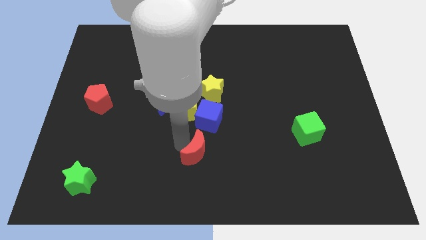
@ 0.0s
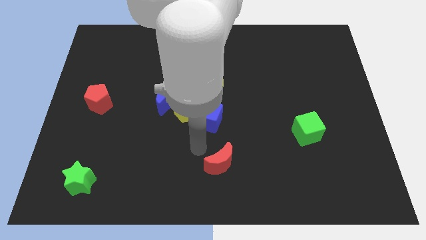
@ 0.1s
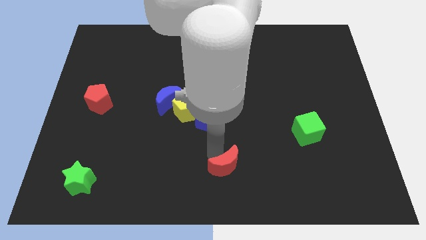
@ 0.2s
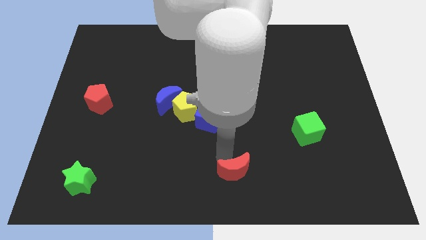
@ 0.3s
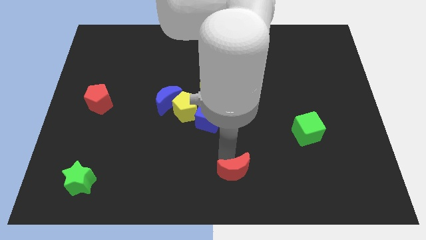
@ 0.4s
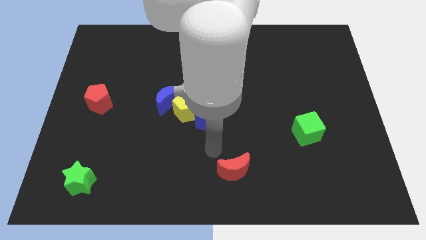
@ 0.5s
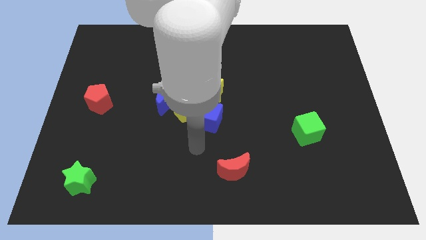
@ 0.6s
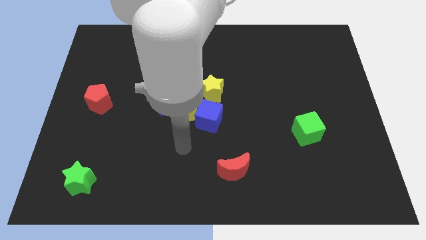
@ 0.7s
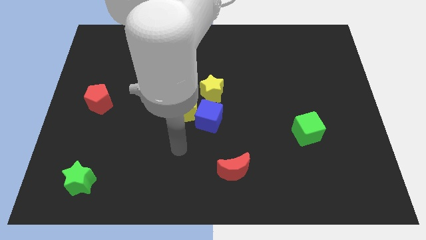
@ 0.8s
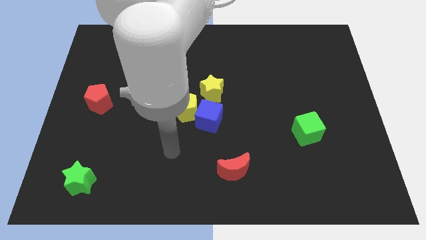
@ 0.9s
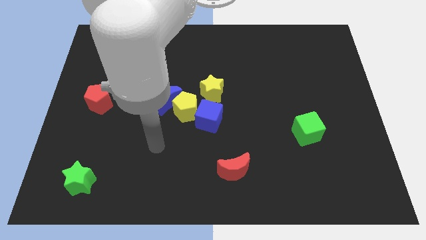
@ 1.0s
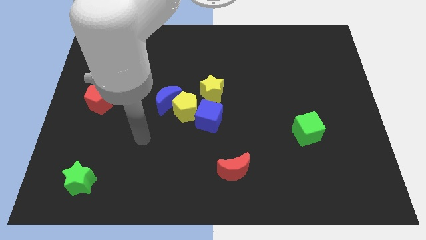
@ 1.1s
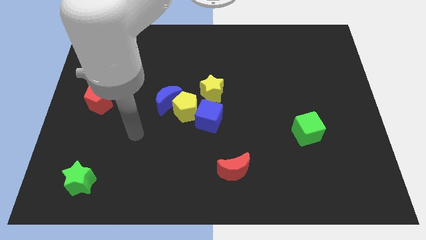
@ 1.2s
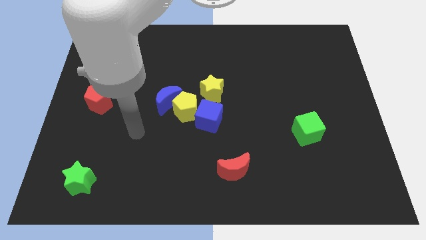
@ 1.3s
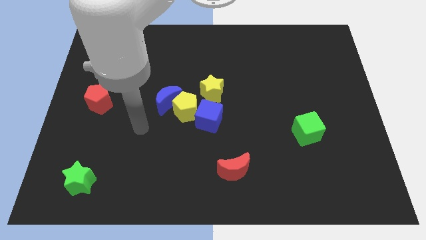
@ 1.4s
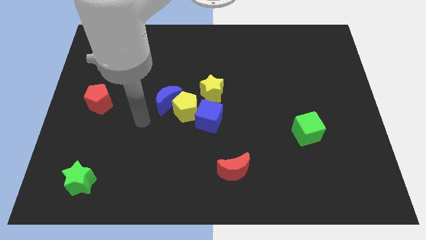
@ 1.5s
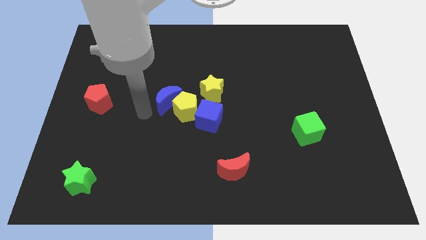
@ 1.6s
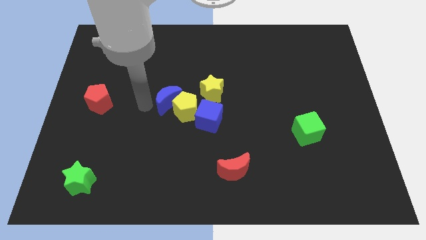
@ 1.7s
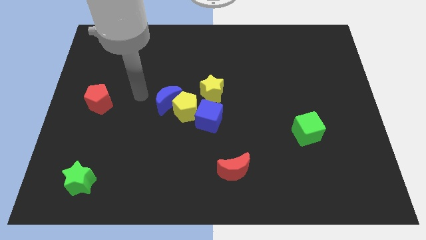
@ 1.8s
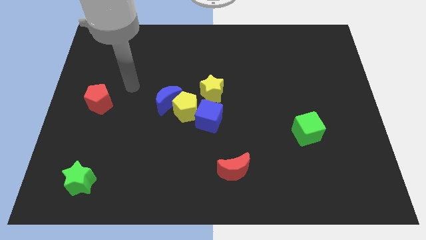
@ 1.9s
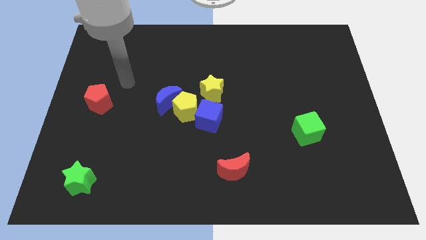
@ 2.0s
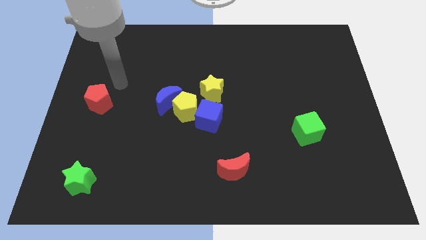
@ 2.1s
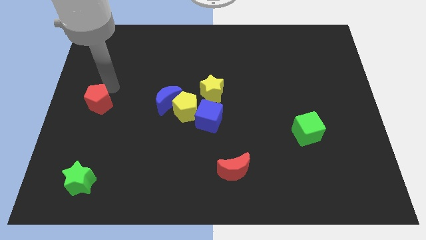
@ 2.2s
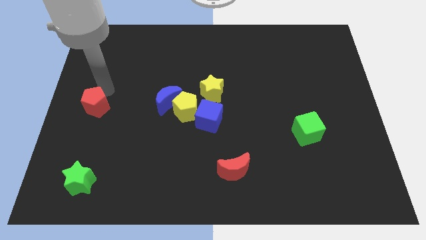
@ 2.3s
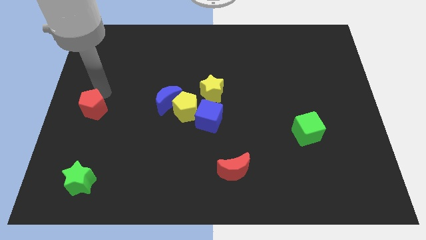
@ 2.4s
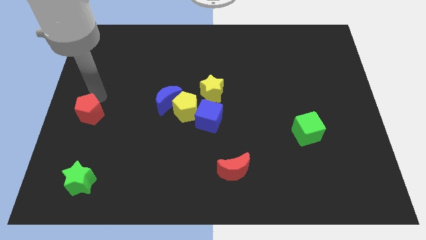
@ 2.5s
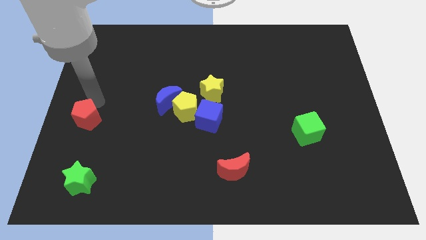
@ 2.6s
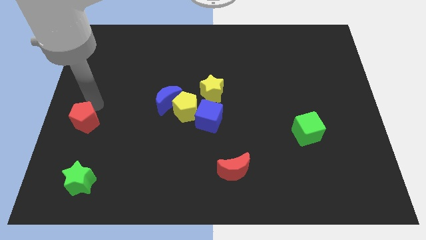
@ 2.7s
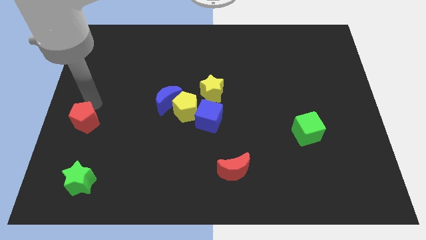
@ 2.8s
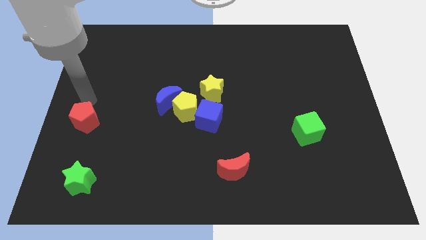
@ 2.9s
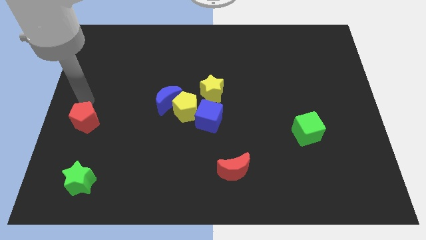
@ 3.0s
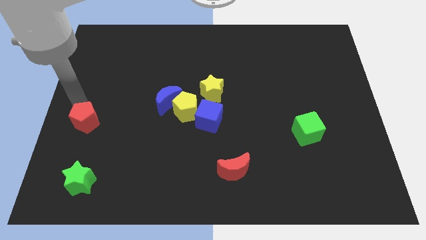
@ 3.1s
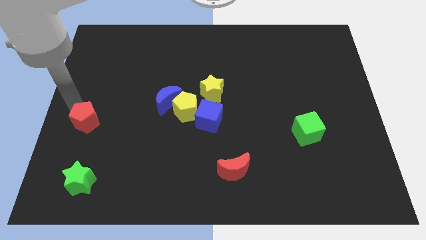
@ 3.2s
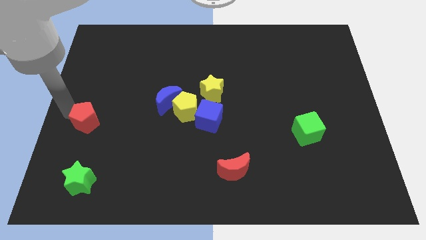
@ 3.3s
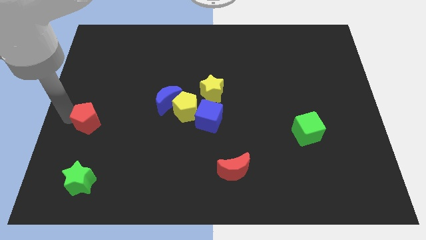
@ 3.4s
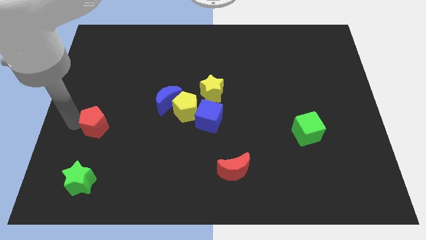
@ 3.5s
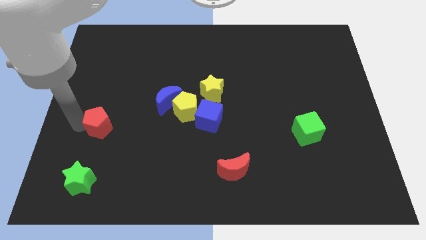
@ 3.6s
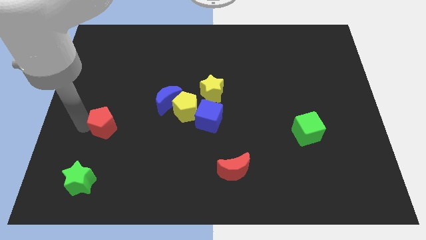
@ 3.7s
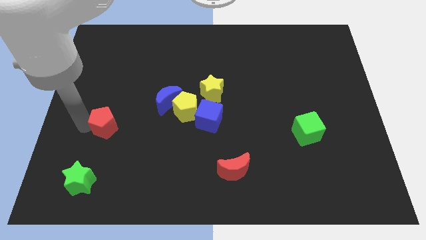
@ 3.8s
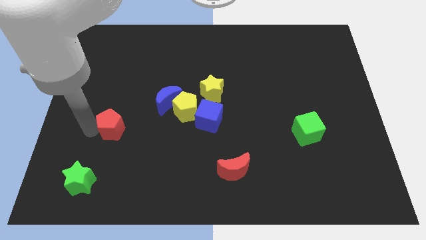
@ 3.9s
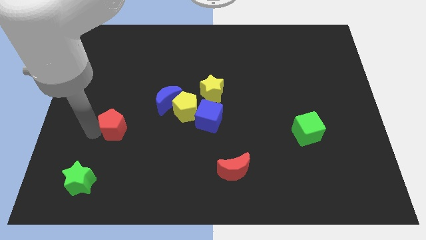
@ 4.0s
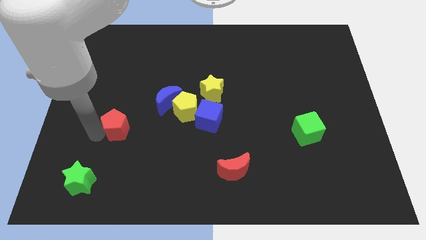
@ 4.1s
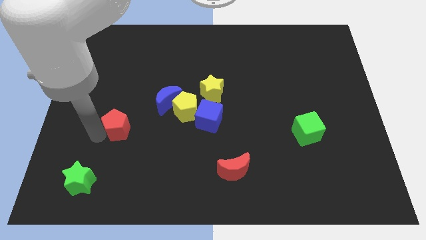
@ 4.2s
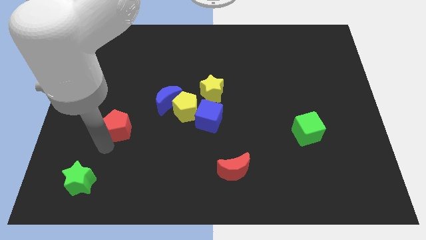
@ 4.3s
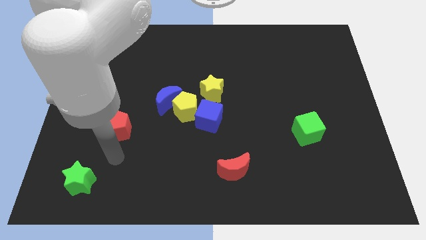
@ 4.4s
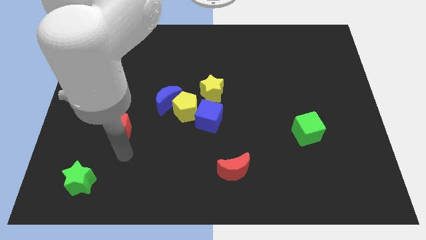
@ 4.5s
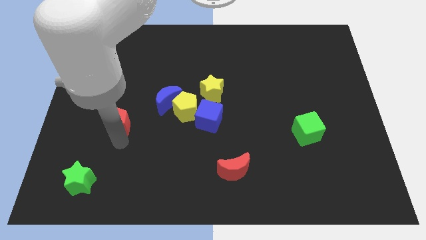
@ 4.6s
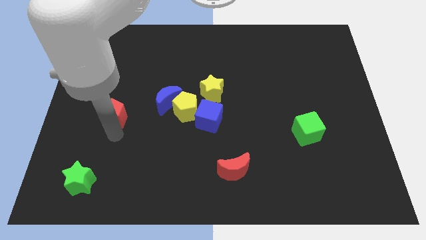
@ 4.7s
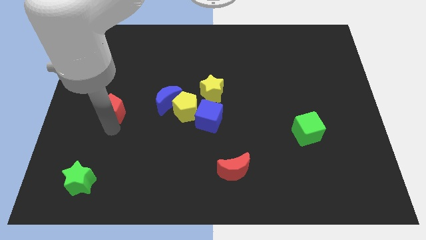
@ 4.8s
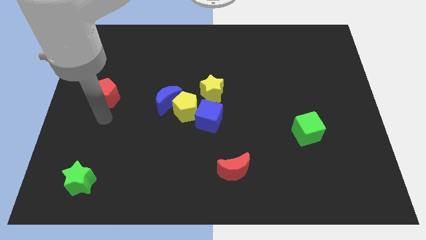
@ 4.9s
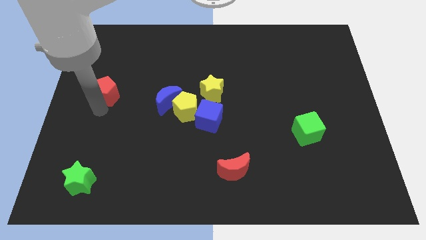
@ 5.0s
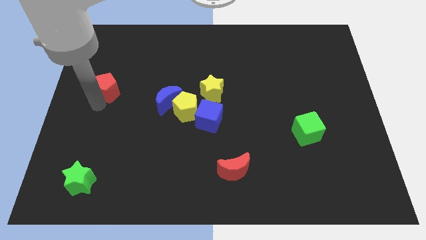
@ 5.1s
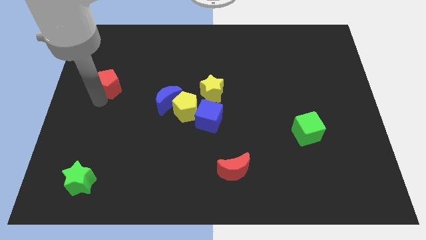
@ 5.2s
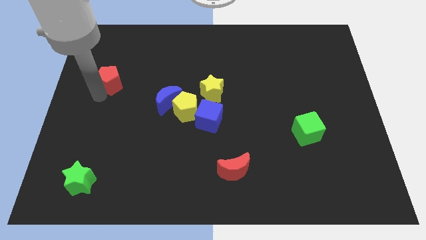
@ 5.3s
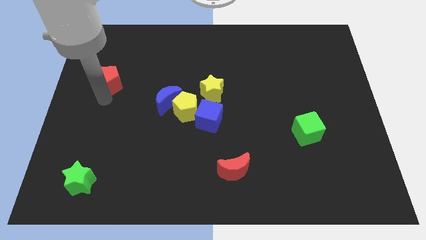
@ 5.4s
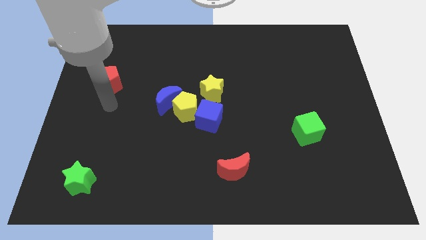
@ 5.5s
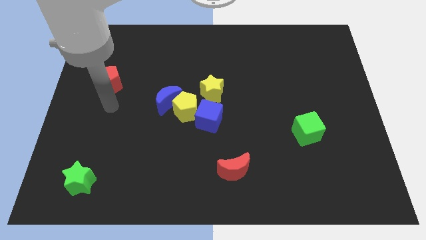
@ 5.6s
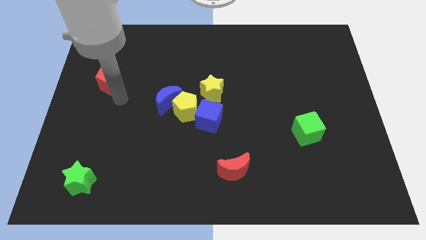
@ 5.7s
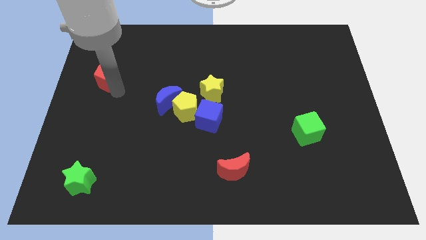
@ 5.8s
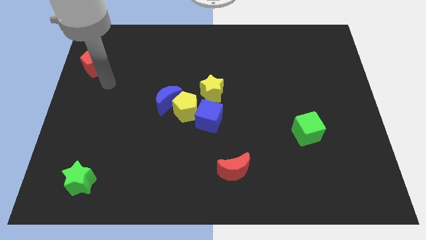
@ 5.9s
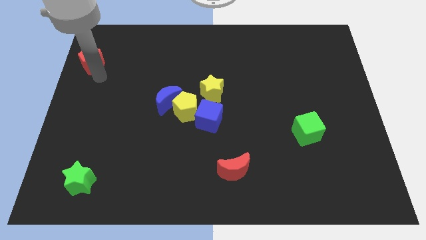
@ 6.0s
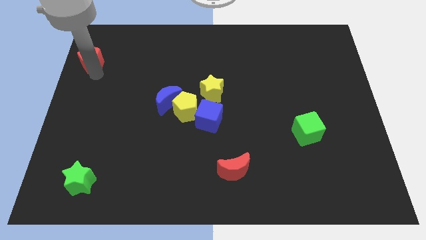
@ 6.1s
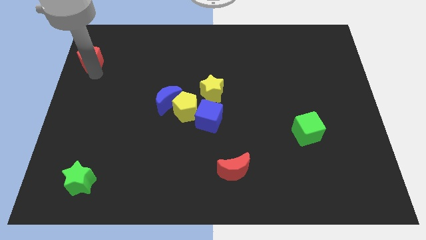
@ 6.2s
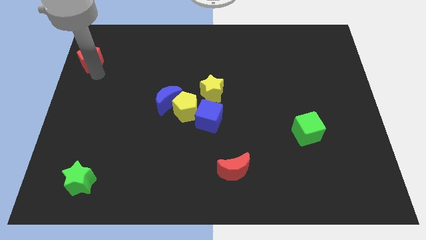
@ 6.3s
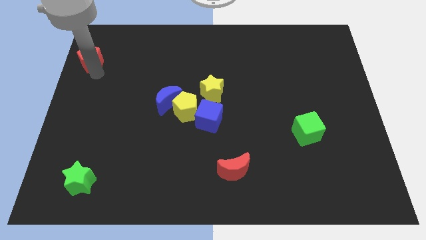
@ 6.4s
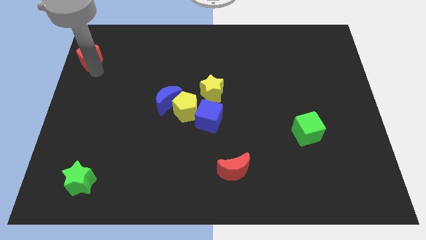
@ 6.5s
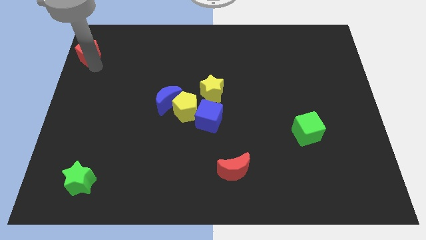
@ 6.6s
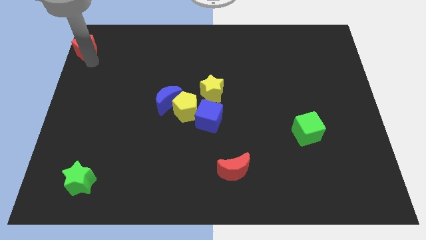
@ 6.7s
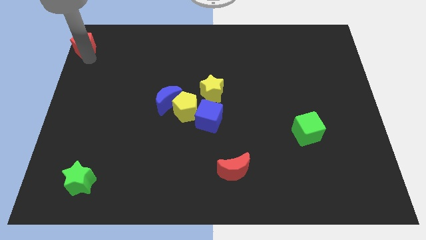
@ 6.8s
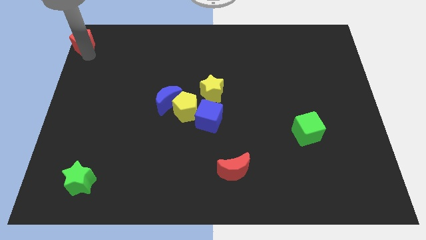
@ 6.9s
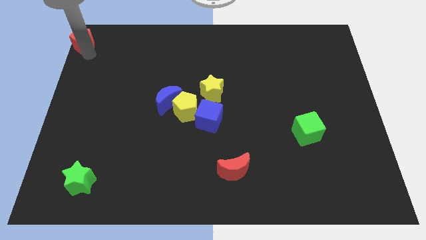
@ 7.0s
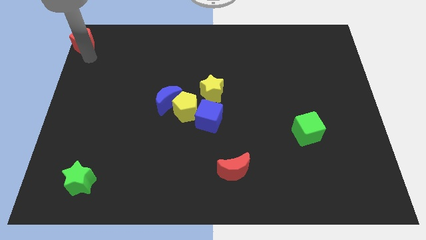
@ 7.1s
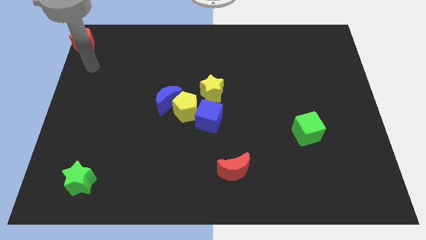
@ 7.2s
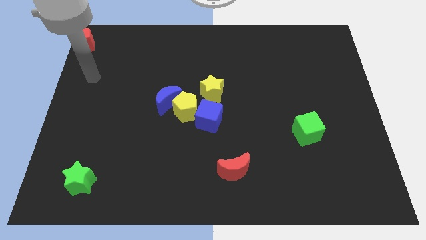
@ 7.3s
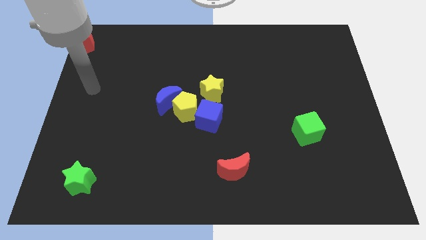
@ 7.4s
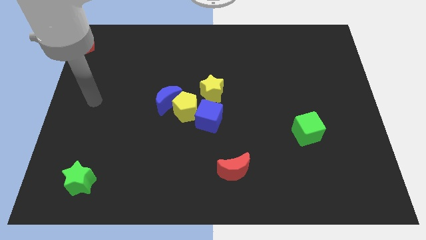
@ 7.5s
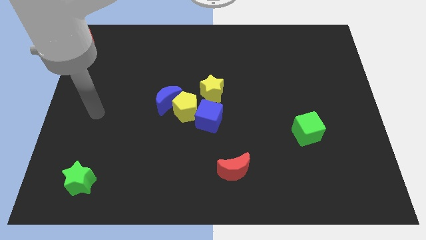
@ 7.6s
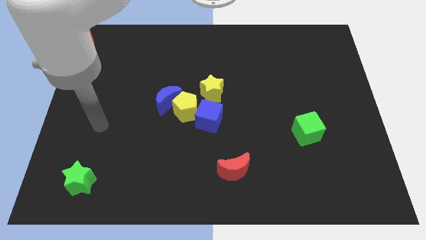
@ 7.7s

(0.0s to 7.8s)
move the red pentagon towards top left of the board

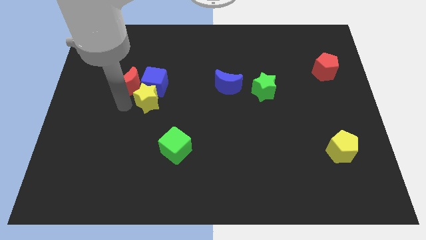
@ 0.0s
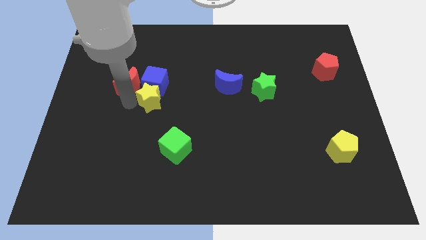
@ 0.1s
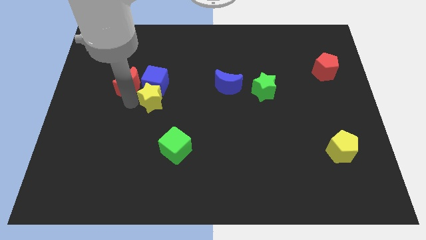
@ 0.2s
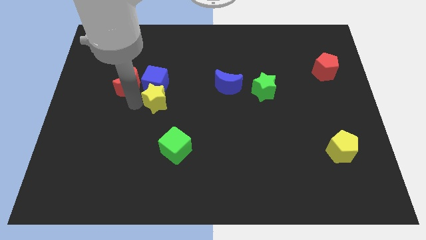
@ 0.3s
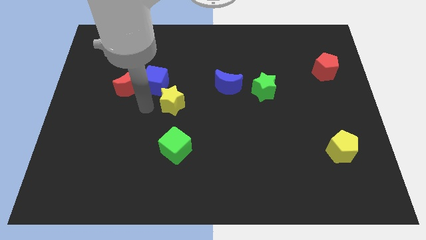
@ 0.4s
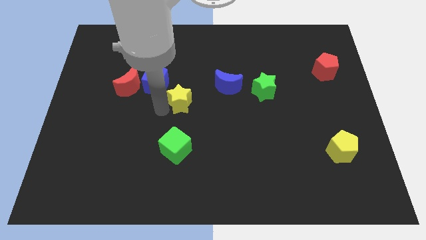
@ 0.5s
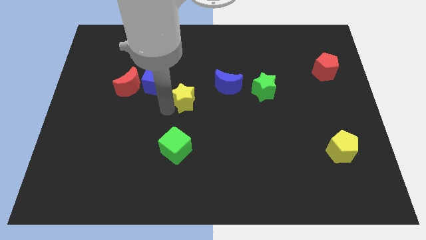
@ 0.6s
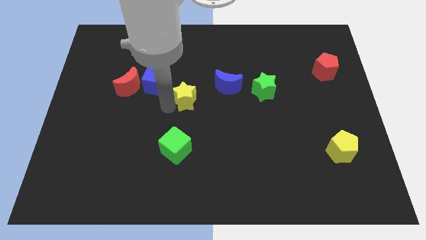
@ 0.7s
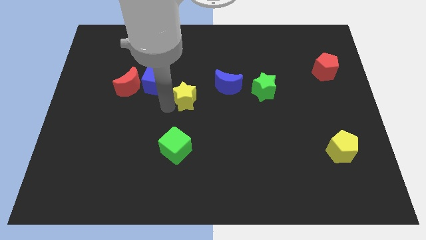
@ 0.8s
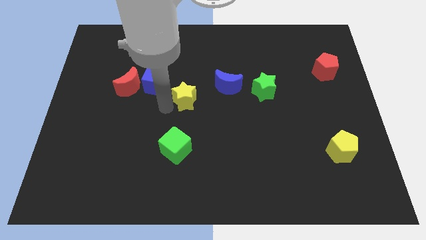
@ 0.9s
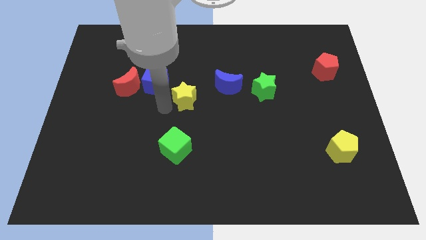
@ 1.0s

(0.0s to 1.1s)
separate the yellow star from the blue cube
